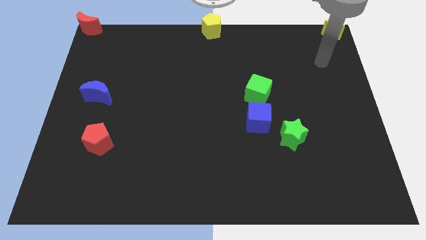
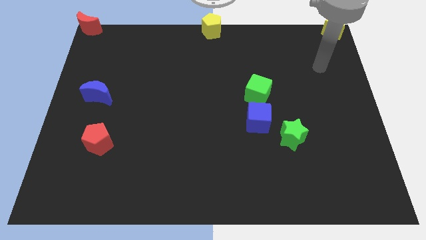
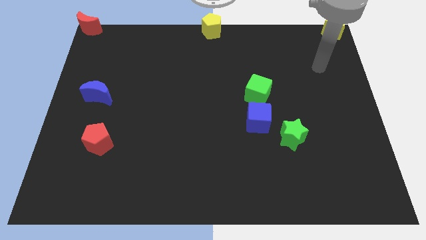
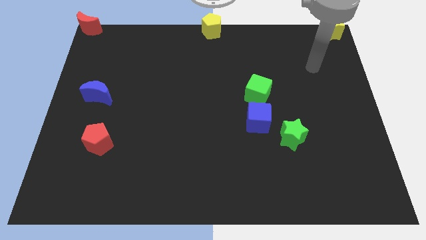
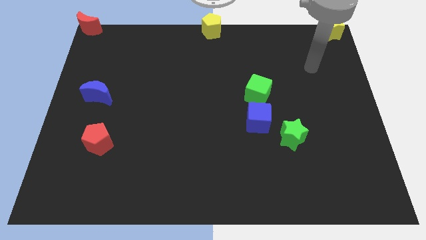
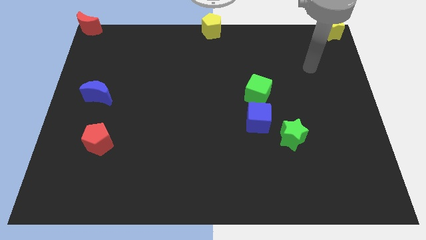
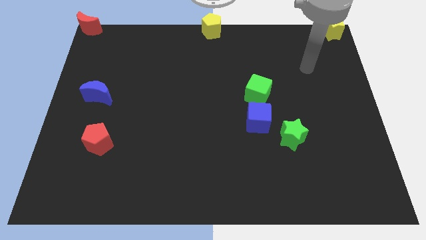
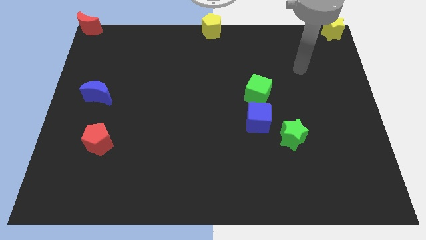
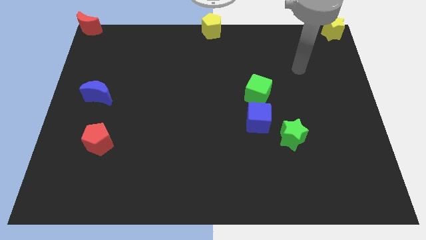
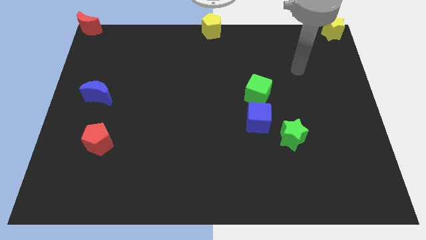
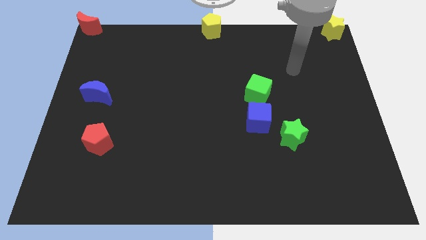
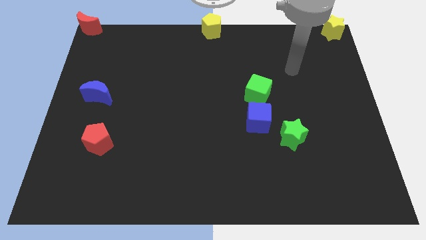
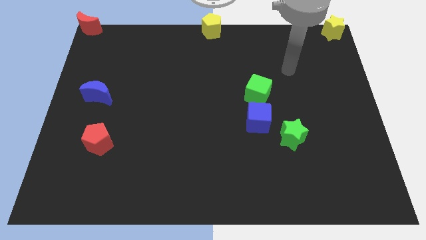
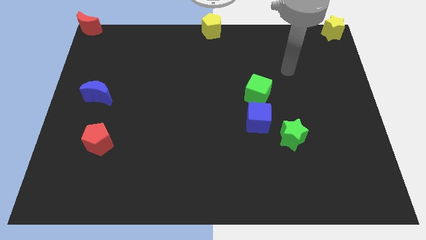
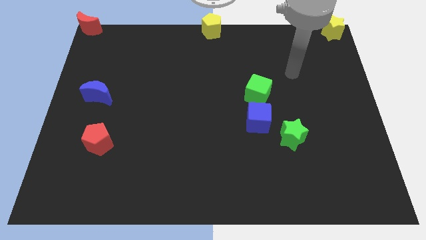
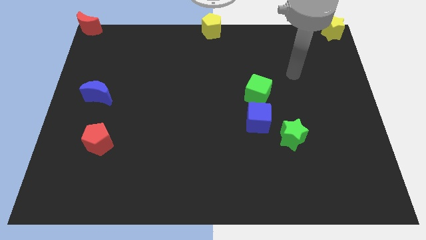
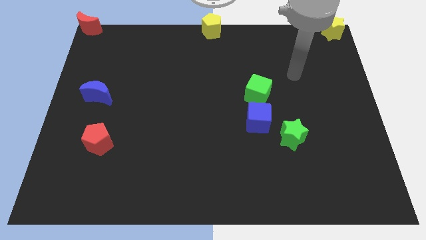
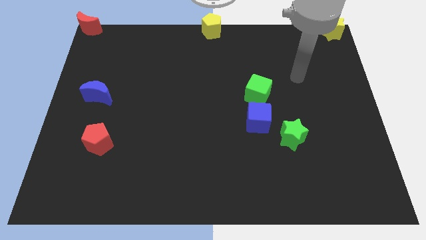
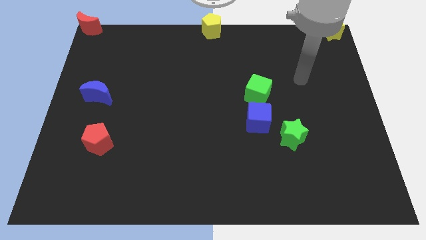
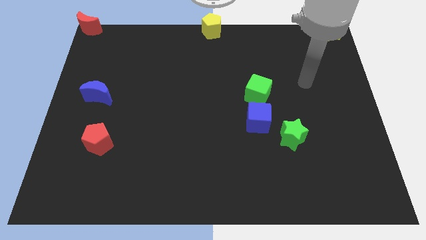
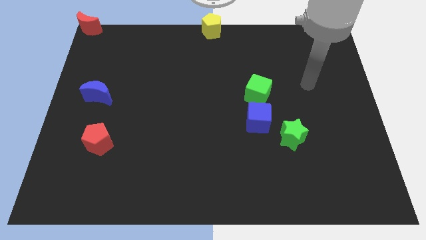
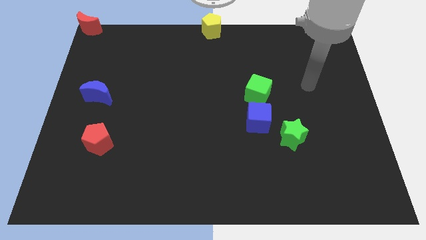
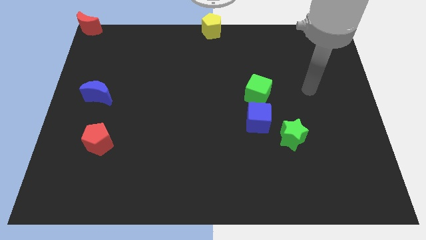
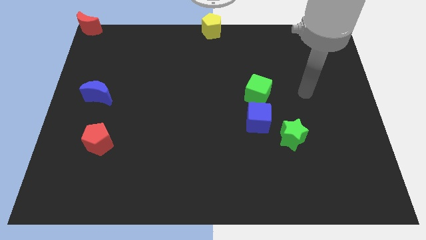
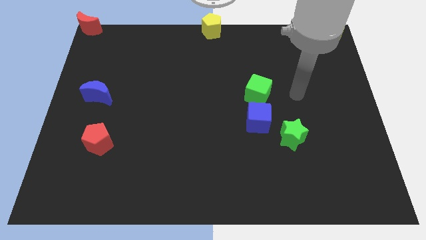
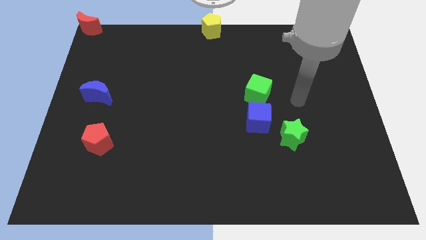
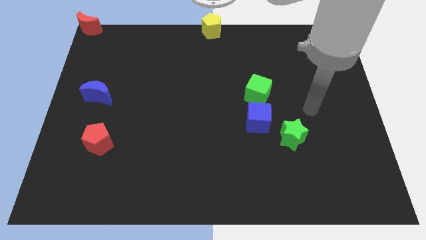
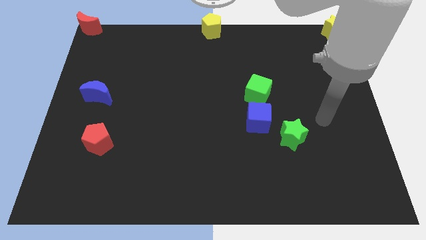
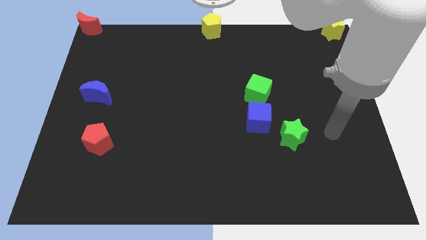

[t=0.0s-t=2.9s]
point your arm at the right of the green star

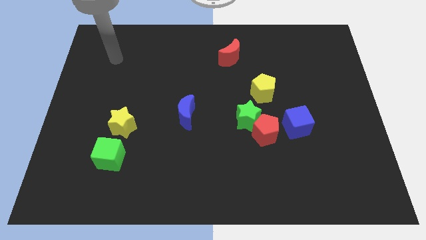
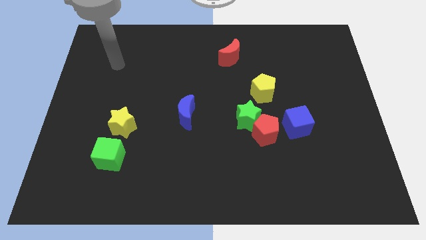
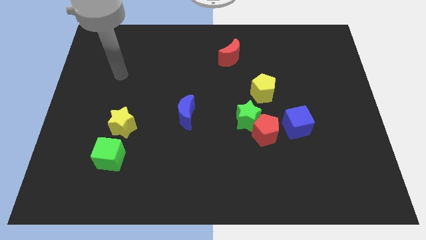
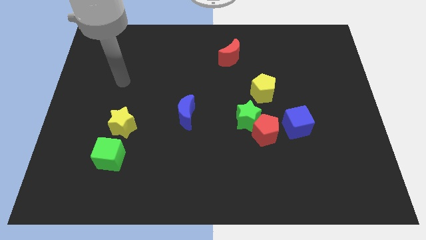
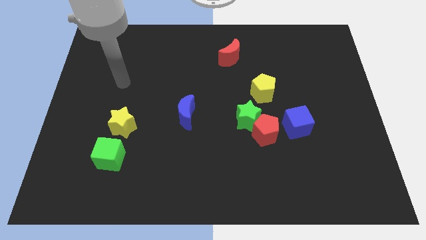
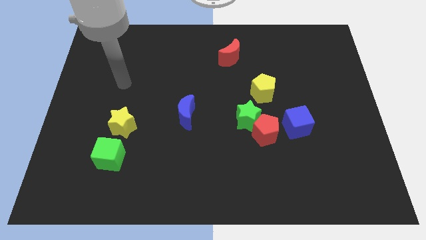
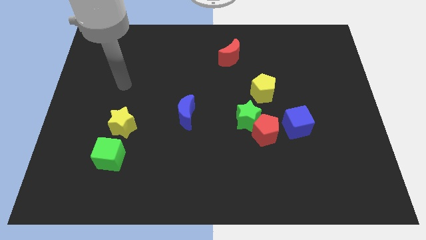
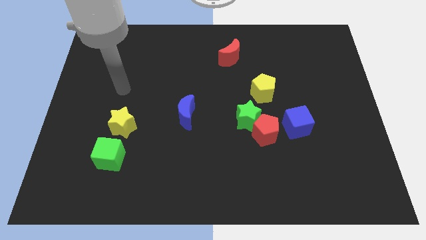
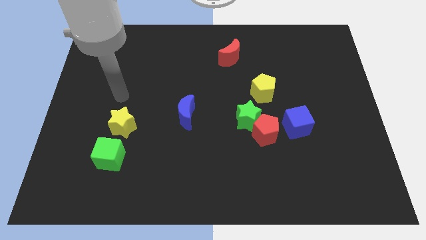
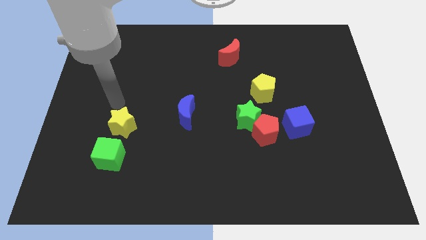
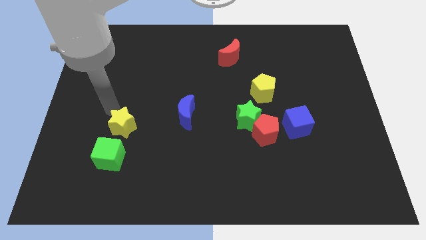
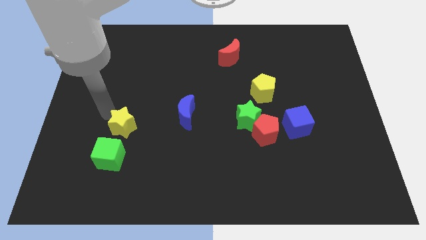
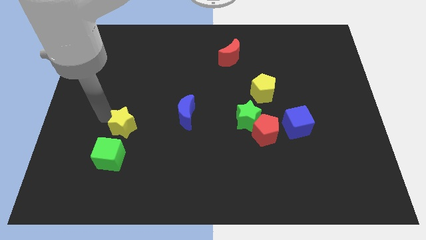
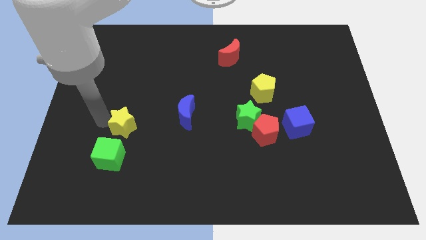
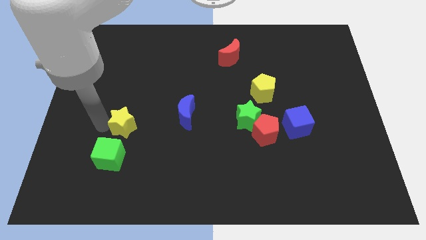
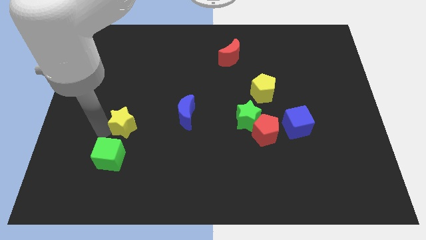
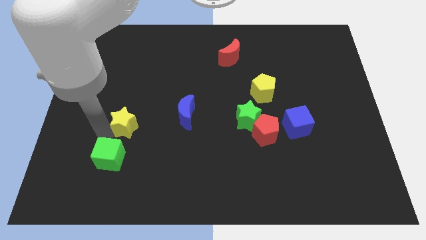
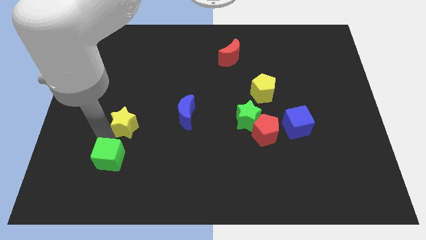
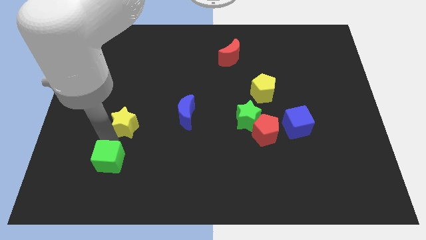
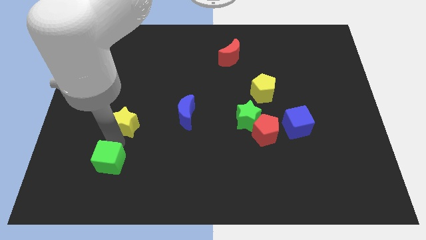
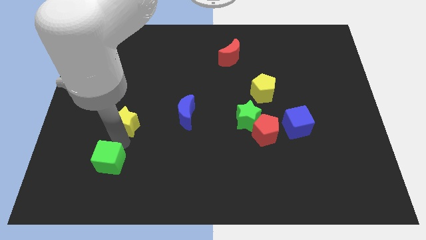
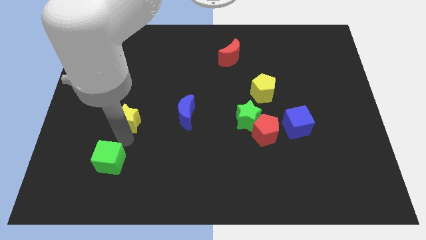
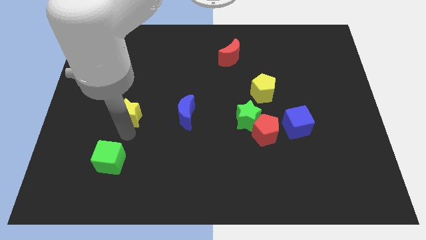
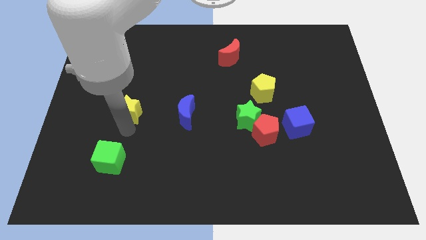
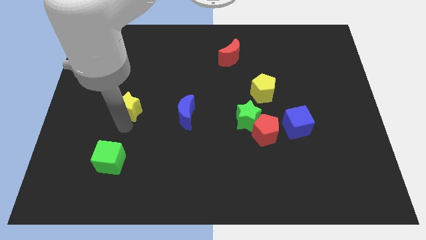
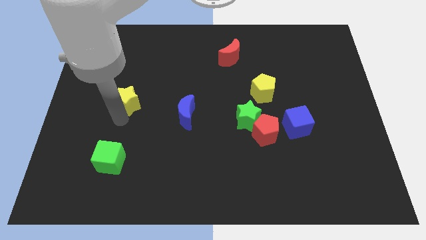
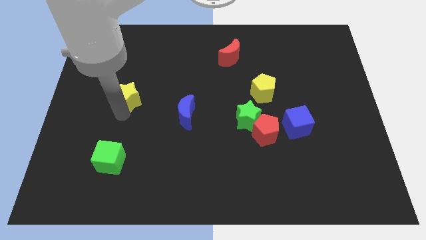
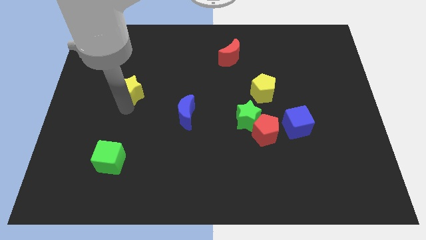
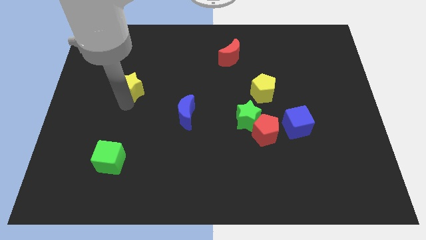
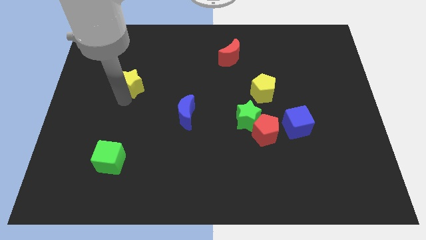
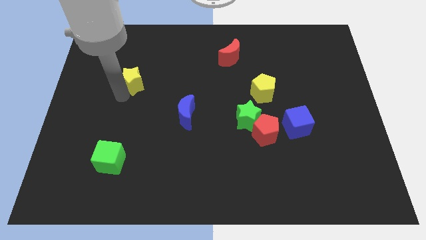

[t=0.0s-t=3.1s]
separate yellow star from the green cube

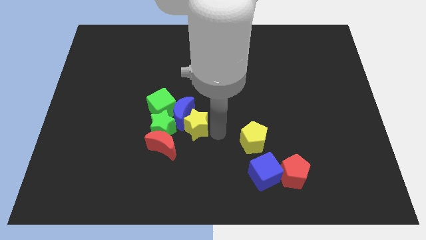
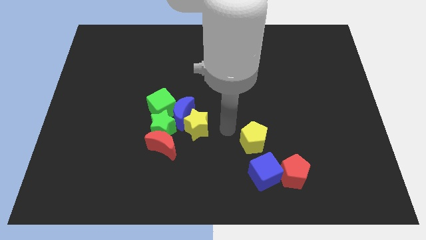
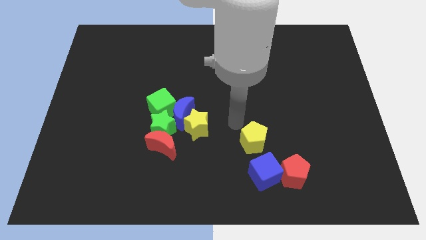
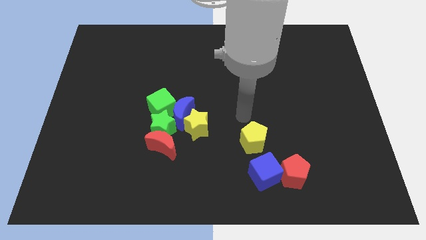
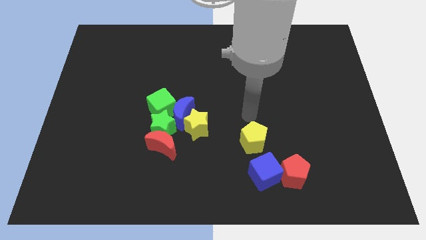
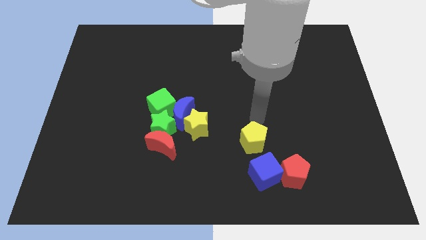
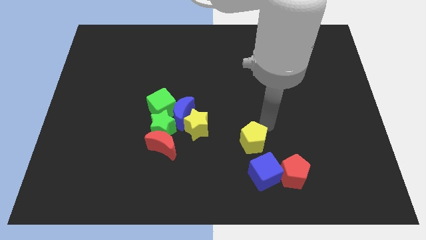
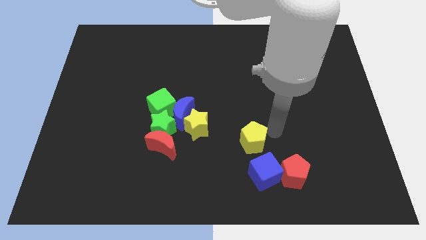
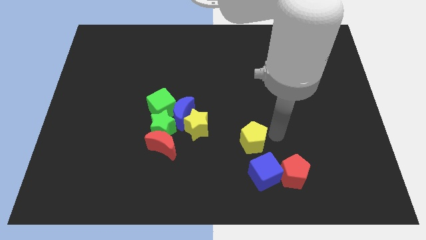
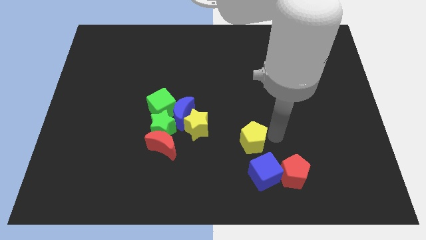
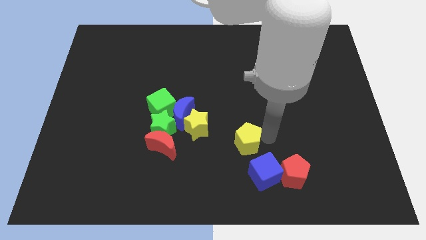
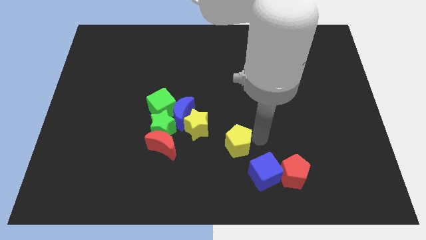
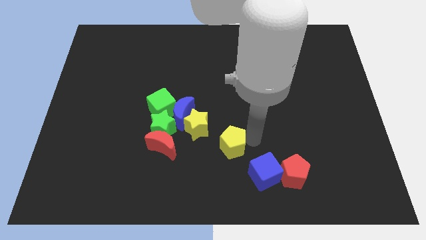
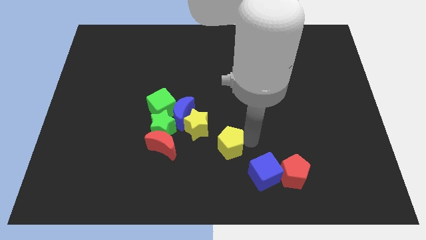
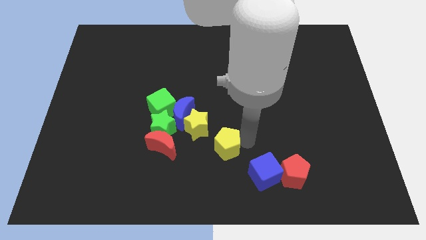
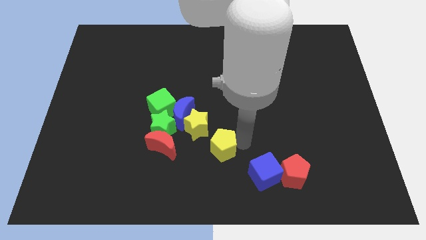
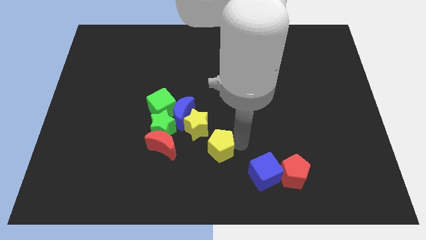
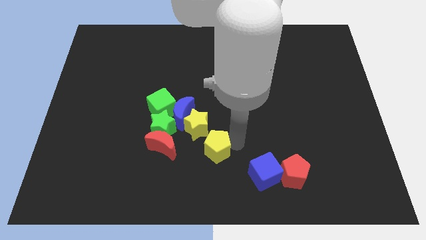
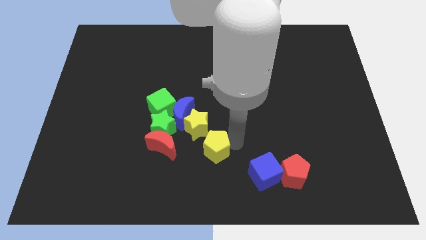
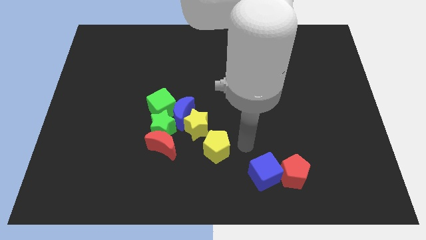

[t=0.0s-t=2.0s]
move the yellow pentagon slightly to the left of the board

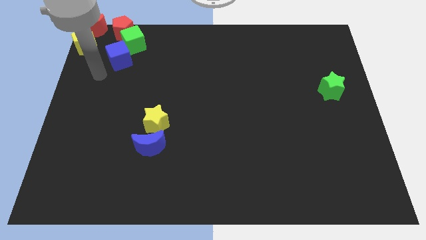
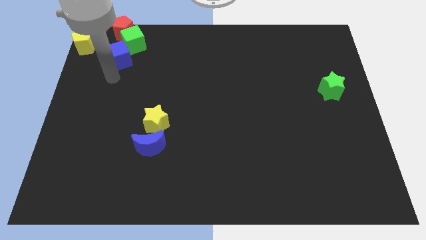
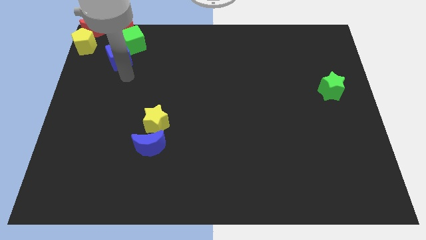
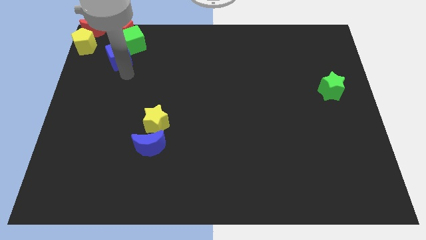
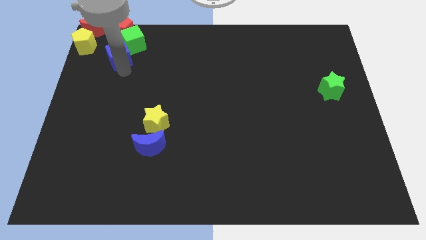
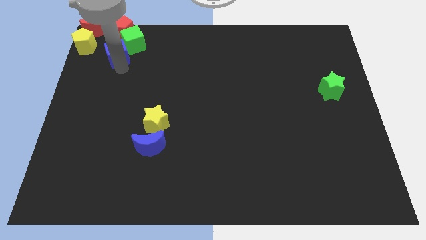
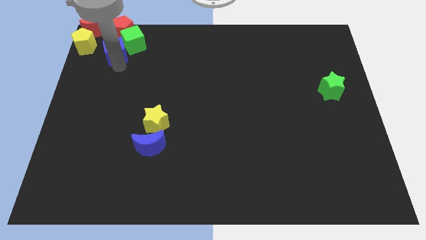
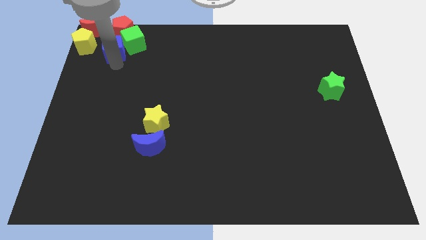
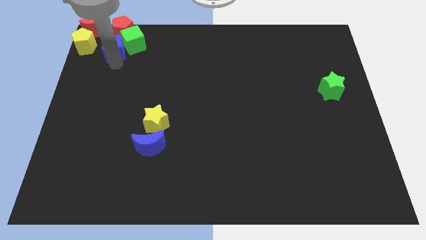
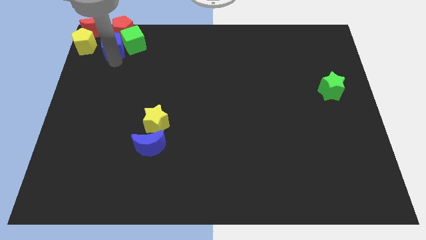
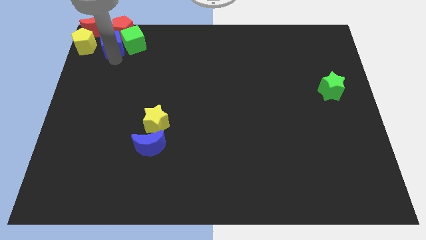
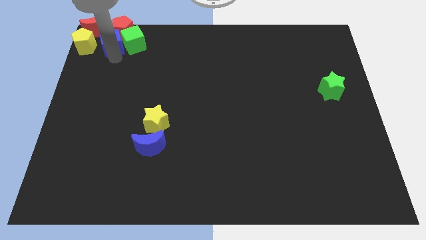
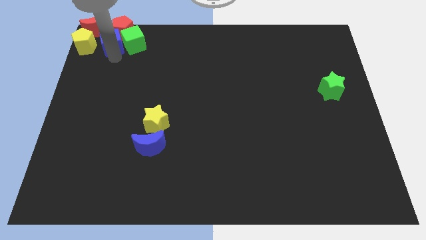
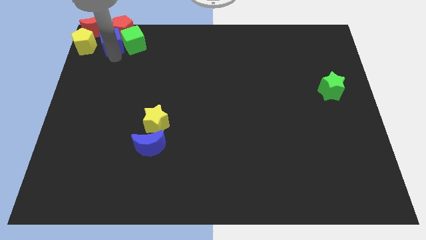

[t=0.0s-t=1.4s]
place the blue cube at the bottom left of the red pentagon
